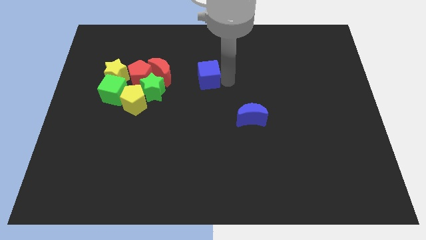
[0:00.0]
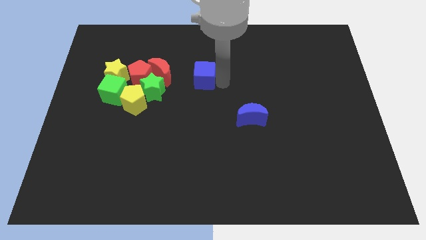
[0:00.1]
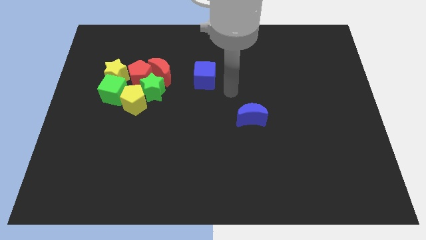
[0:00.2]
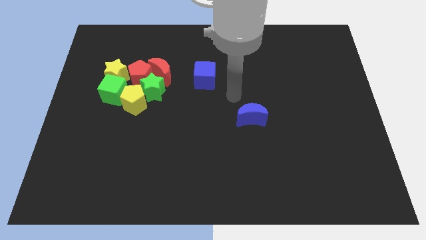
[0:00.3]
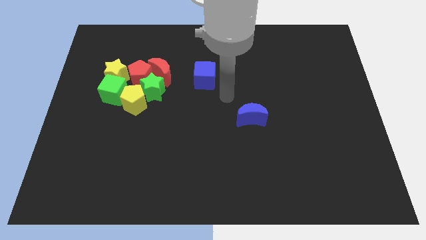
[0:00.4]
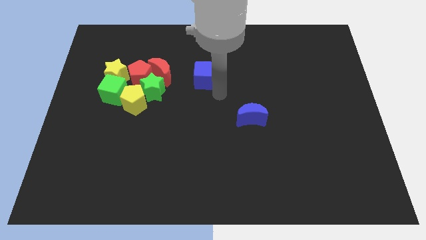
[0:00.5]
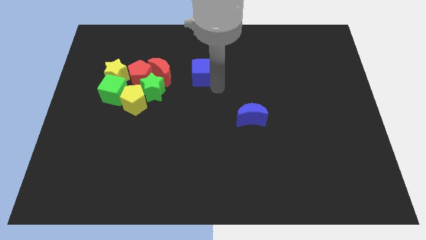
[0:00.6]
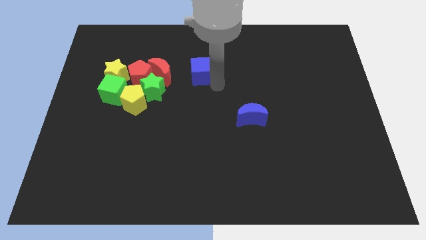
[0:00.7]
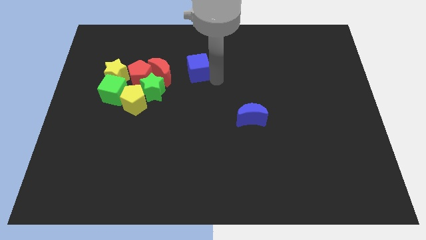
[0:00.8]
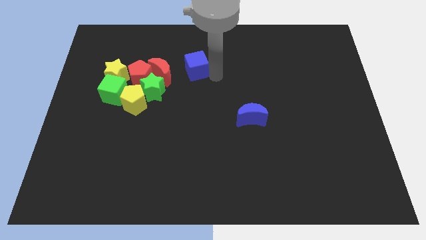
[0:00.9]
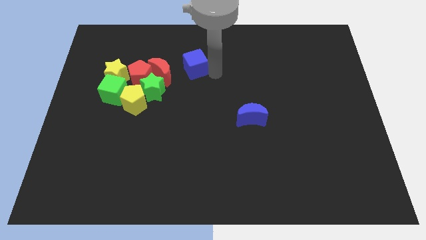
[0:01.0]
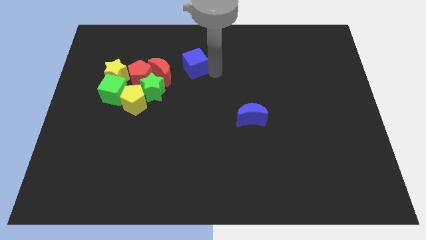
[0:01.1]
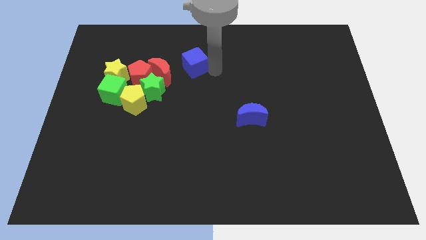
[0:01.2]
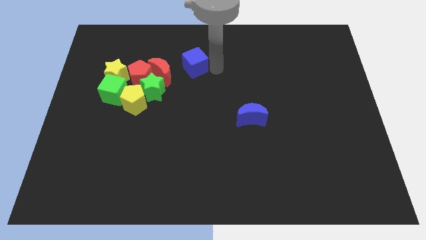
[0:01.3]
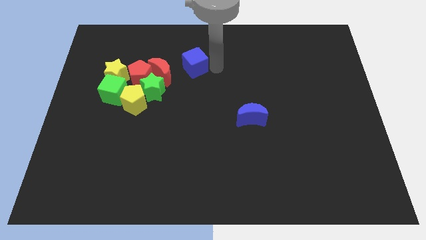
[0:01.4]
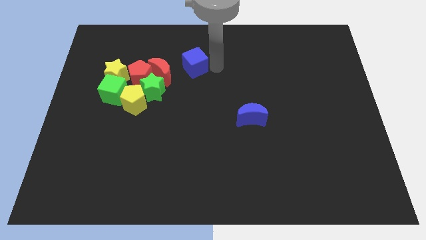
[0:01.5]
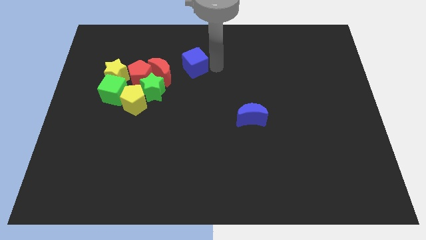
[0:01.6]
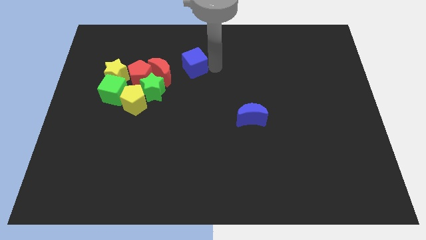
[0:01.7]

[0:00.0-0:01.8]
push the blue cube towards the top of red crescent

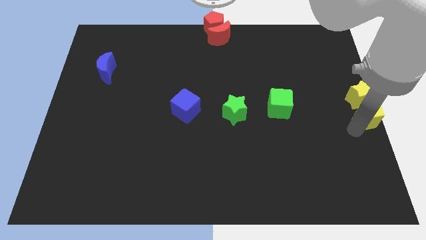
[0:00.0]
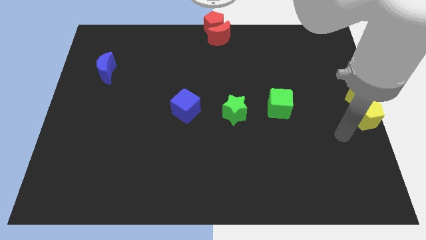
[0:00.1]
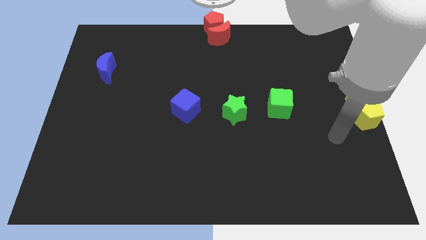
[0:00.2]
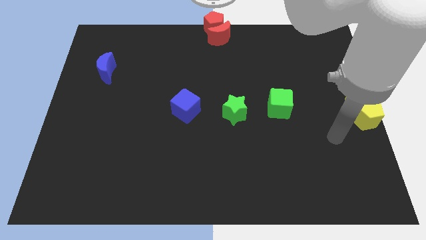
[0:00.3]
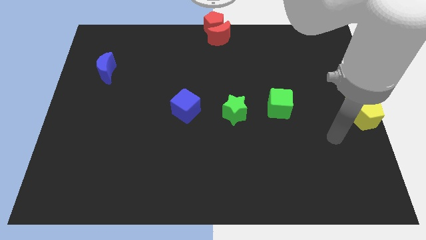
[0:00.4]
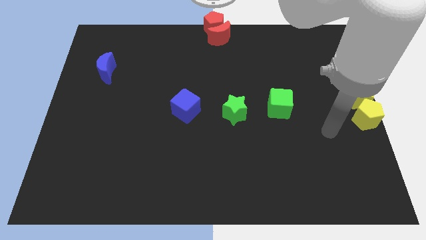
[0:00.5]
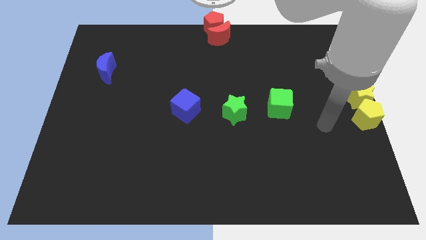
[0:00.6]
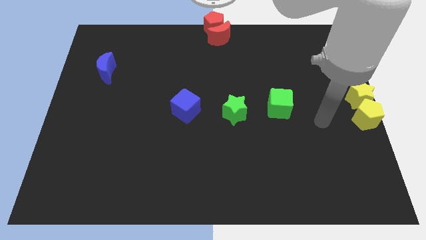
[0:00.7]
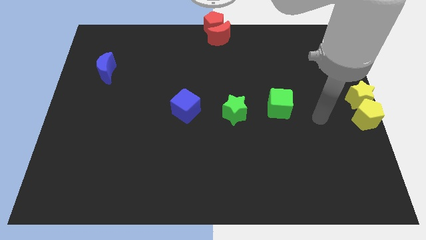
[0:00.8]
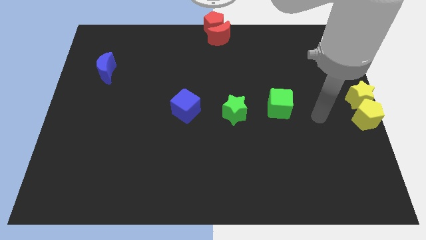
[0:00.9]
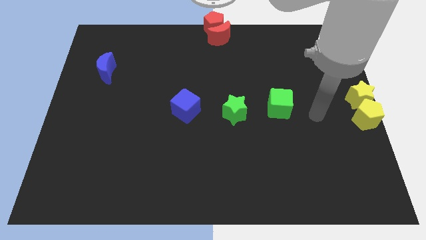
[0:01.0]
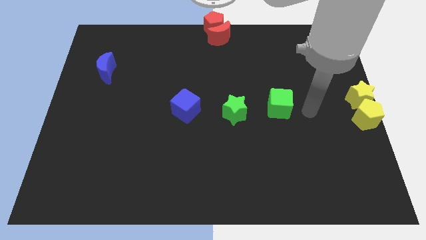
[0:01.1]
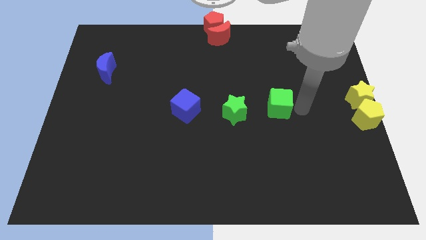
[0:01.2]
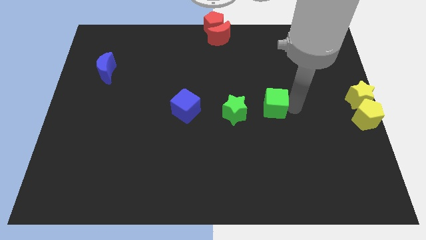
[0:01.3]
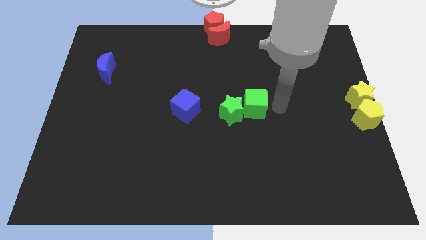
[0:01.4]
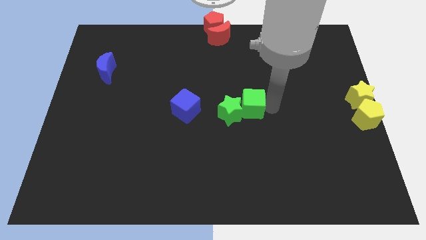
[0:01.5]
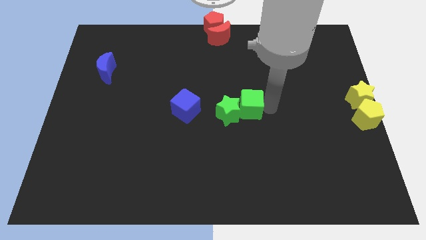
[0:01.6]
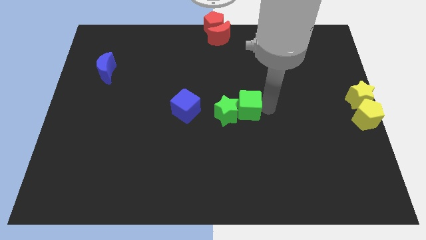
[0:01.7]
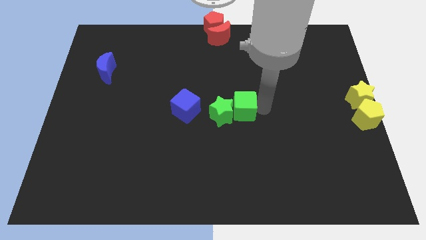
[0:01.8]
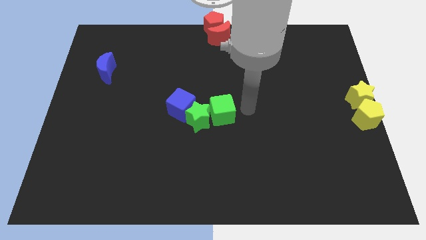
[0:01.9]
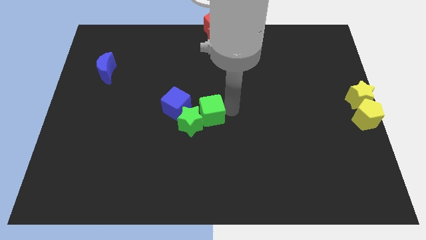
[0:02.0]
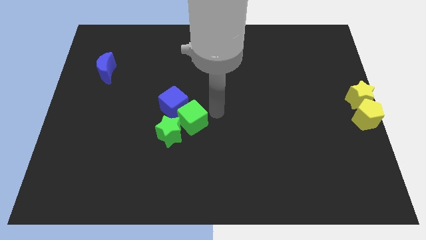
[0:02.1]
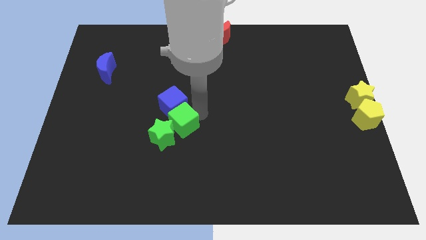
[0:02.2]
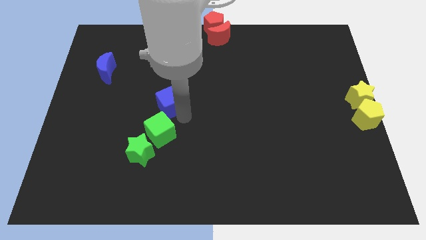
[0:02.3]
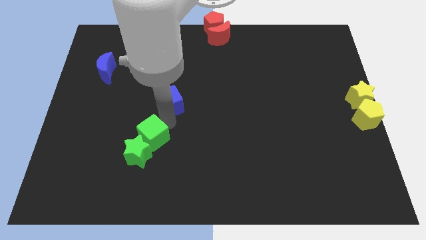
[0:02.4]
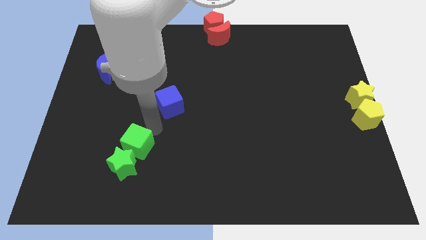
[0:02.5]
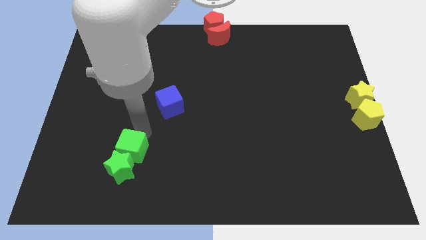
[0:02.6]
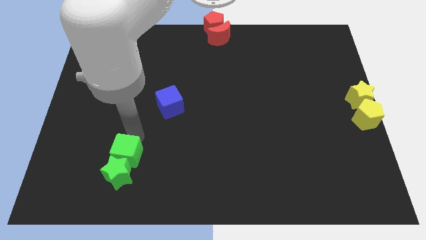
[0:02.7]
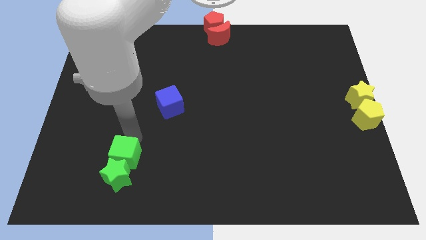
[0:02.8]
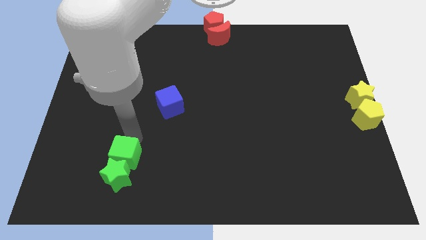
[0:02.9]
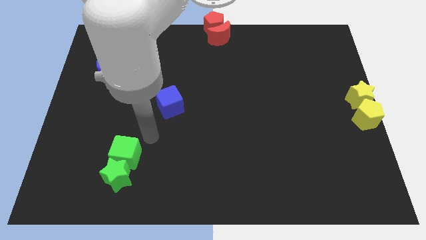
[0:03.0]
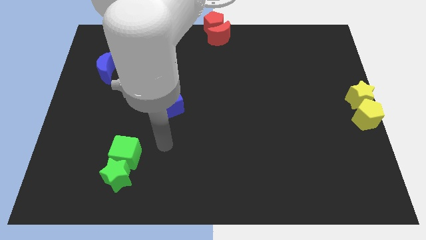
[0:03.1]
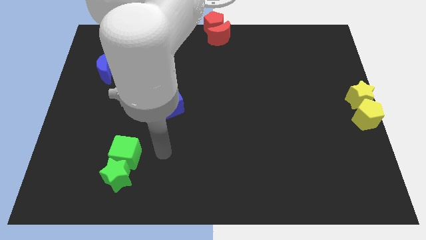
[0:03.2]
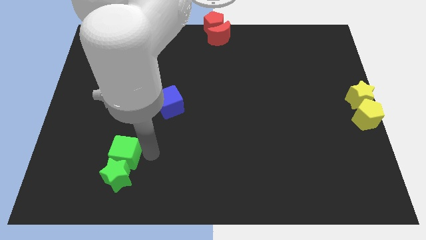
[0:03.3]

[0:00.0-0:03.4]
push the green blocks towards the left side of the board

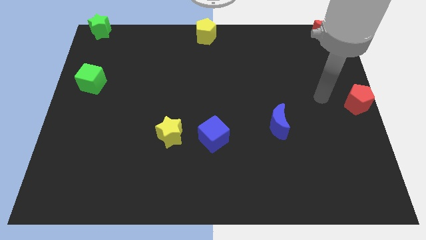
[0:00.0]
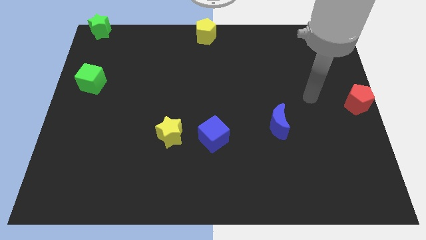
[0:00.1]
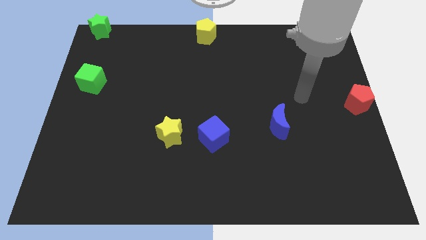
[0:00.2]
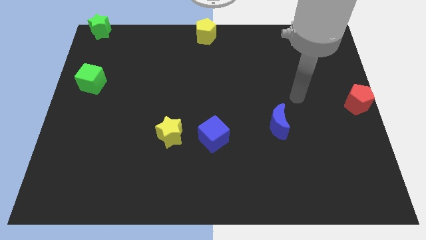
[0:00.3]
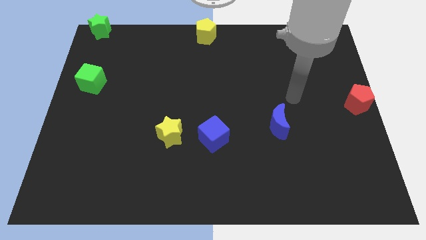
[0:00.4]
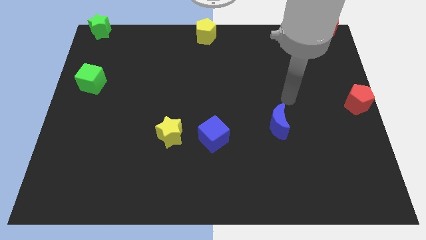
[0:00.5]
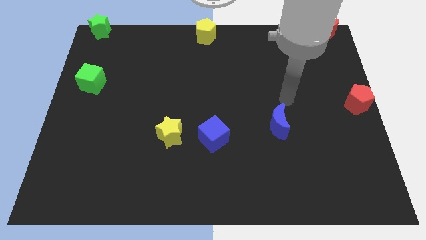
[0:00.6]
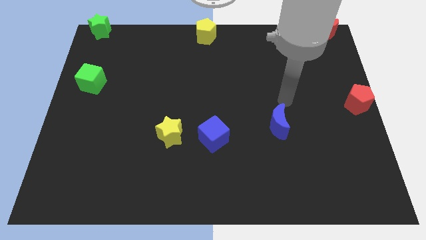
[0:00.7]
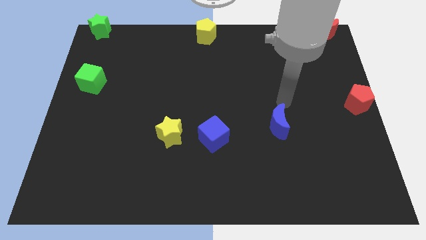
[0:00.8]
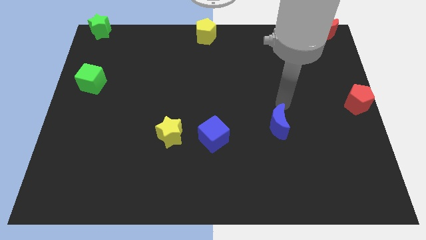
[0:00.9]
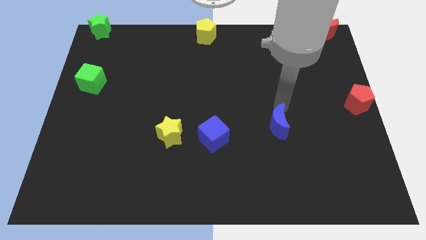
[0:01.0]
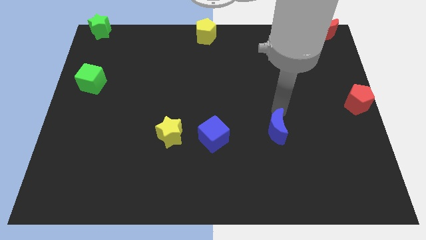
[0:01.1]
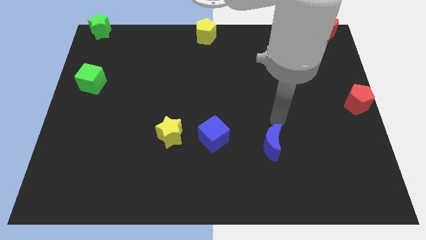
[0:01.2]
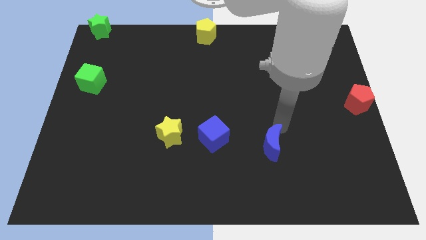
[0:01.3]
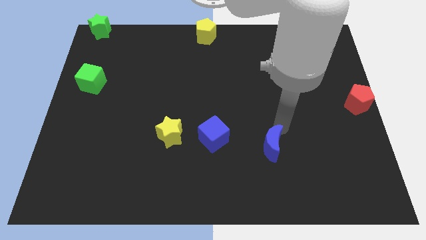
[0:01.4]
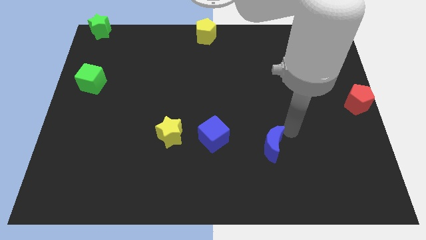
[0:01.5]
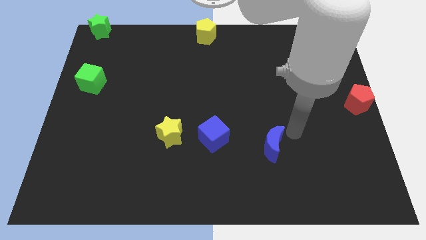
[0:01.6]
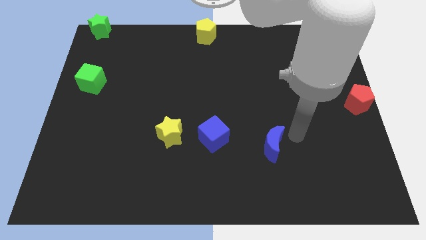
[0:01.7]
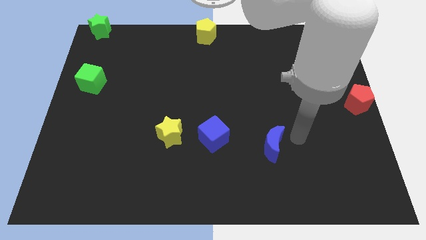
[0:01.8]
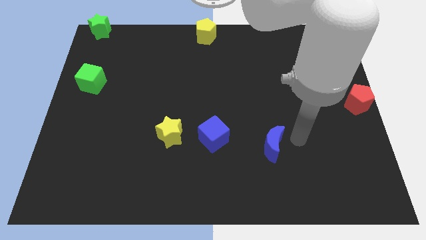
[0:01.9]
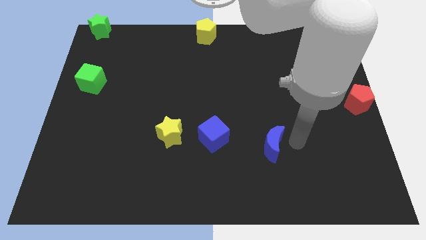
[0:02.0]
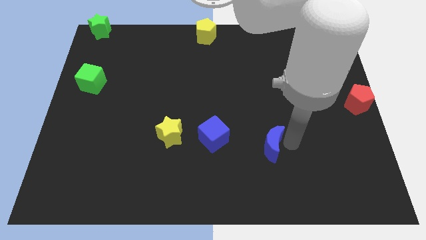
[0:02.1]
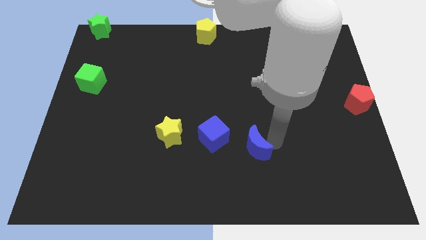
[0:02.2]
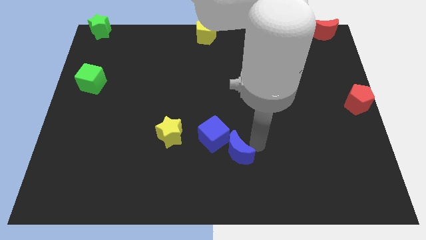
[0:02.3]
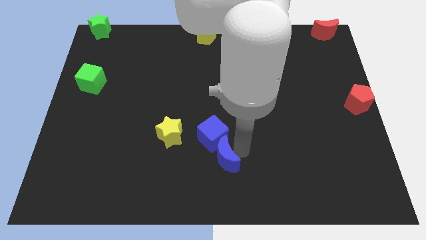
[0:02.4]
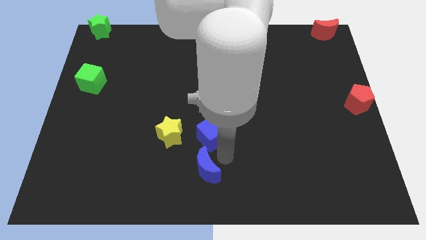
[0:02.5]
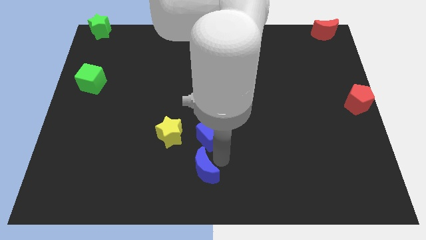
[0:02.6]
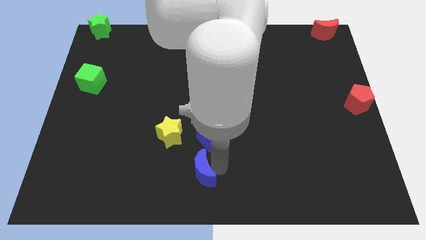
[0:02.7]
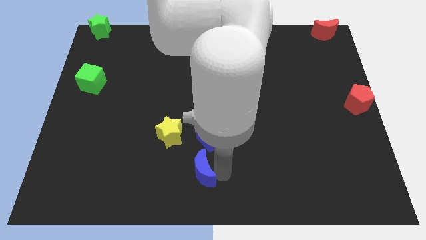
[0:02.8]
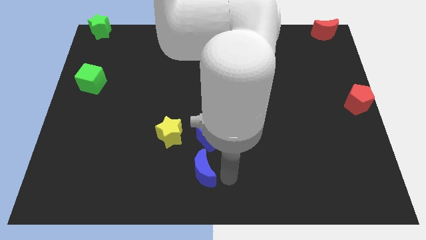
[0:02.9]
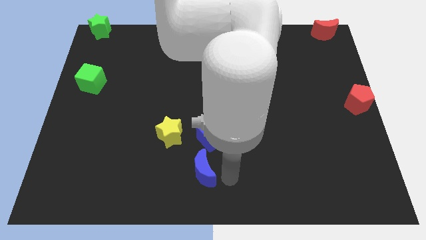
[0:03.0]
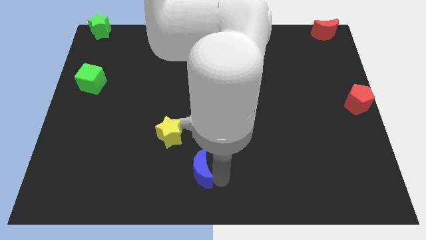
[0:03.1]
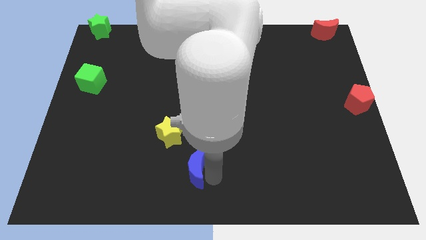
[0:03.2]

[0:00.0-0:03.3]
place blue crescent down to the blue cube

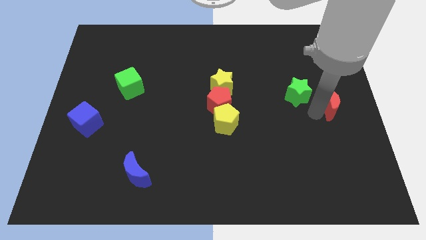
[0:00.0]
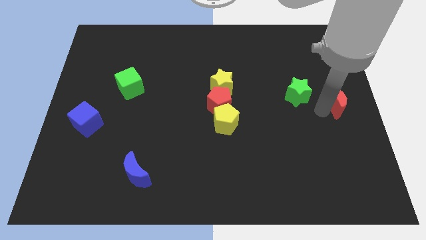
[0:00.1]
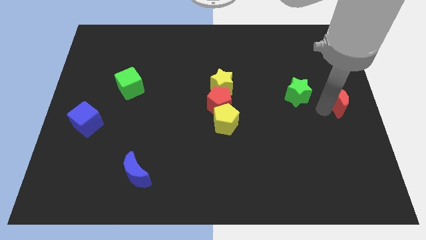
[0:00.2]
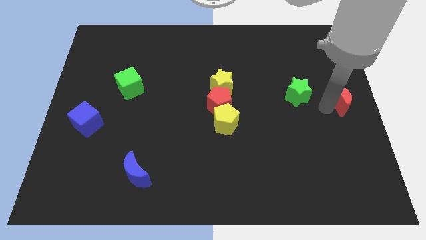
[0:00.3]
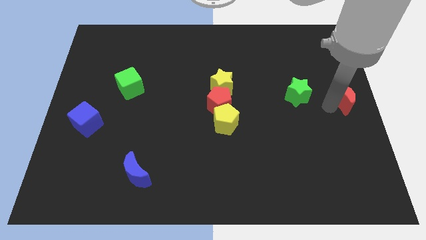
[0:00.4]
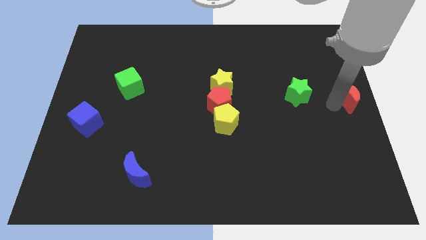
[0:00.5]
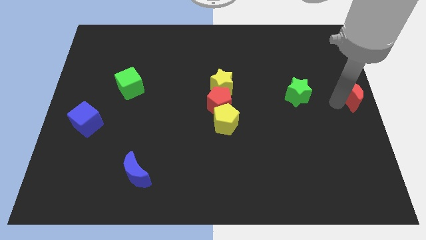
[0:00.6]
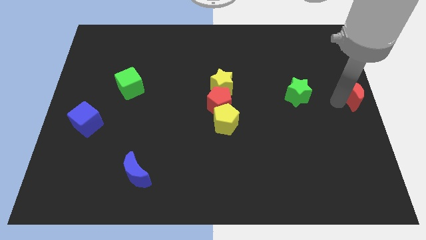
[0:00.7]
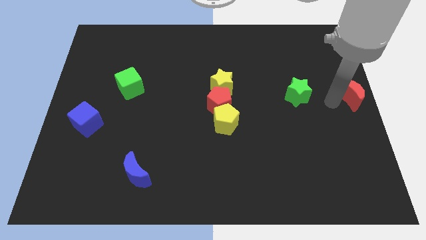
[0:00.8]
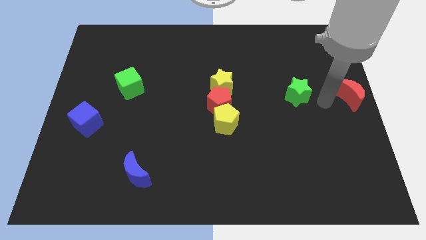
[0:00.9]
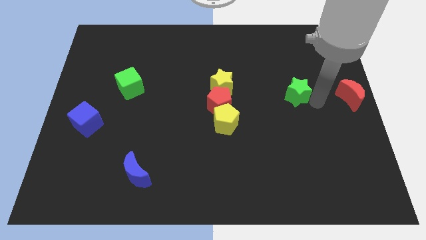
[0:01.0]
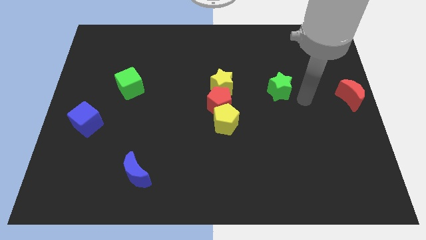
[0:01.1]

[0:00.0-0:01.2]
place red moon to the center right of the board
